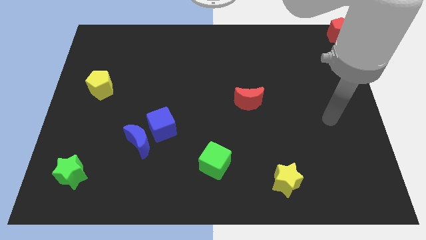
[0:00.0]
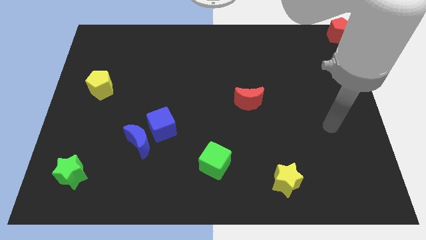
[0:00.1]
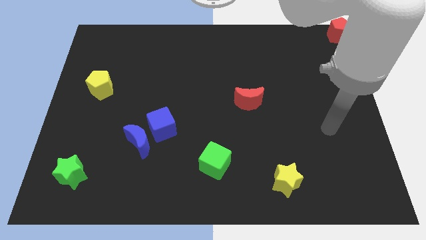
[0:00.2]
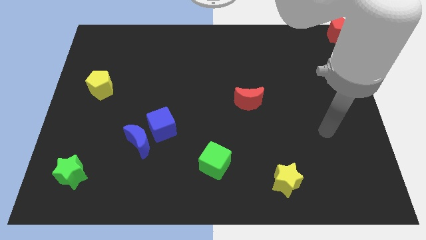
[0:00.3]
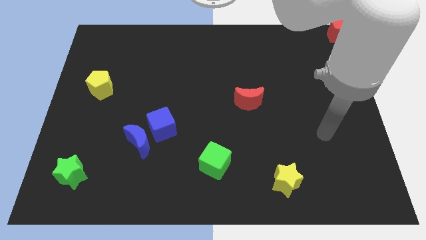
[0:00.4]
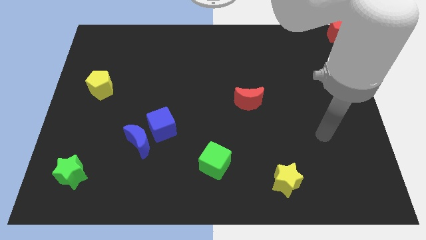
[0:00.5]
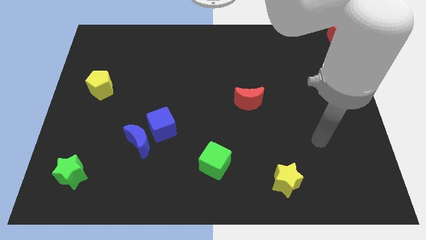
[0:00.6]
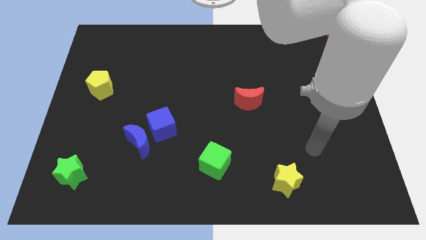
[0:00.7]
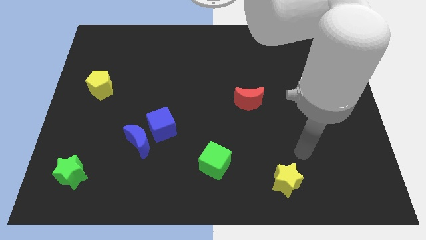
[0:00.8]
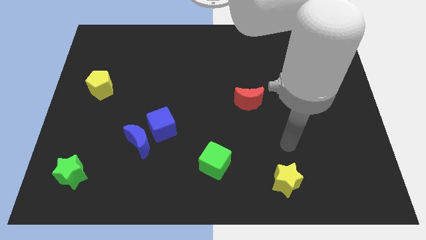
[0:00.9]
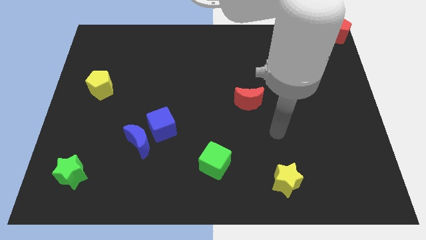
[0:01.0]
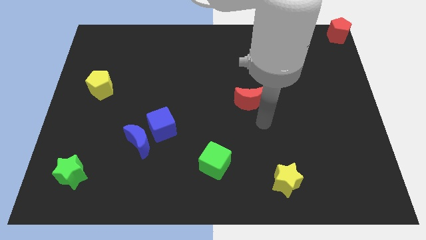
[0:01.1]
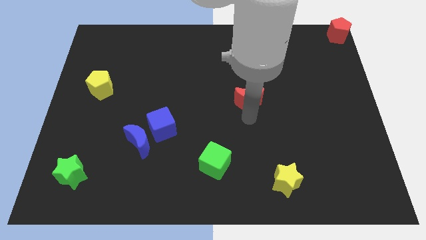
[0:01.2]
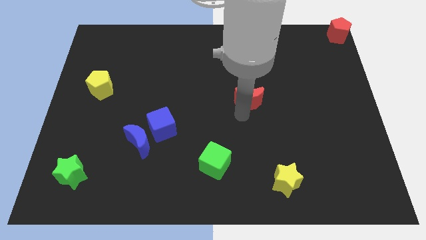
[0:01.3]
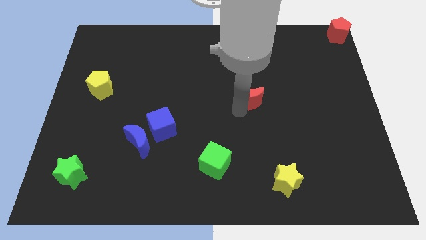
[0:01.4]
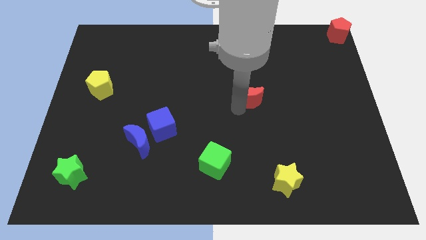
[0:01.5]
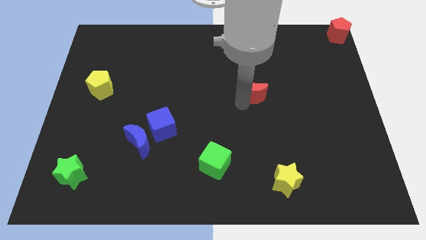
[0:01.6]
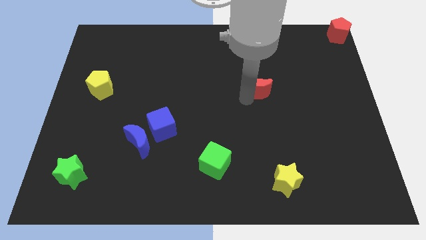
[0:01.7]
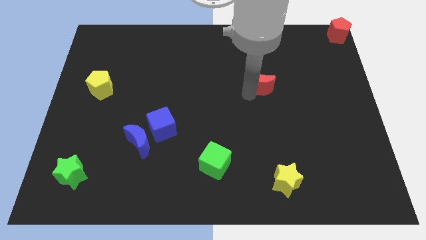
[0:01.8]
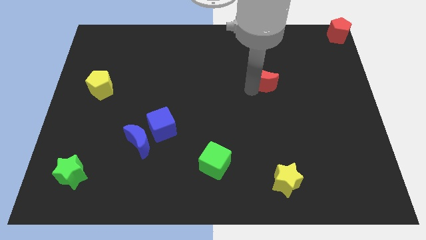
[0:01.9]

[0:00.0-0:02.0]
push the red crescent towards the red pentagon

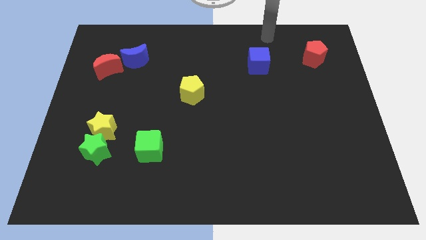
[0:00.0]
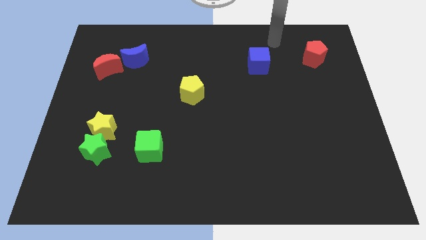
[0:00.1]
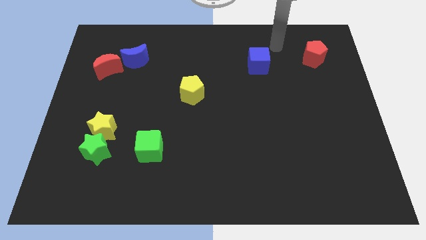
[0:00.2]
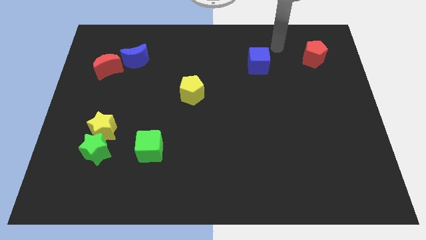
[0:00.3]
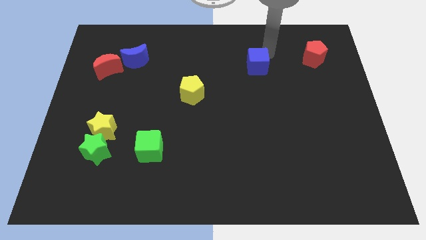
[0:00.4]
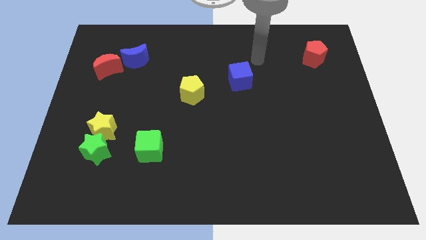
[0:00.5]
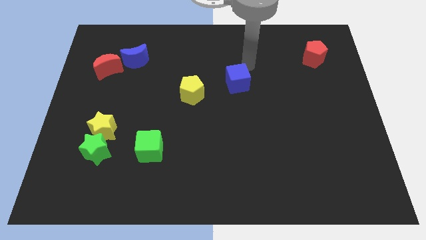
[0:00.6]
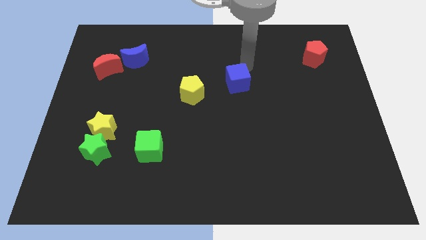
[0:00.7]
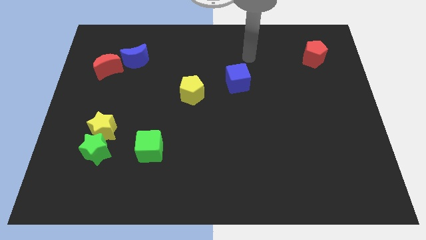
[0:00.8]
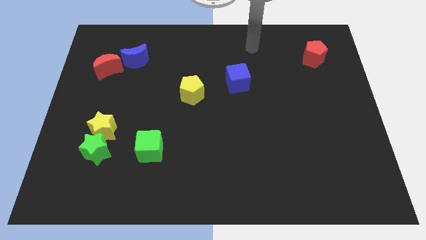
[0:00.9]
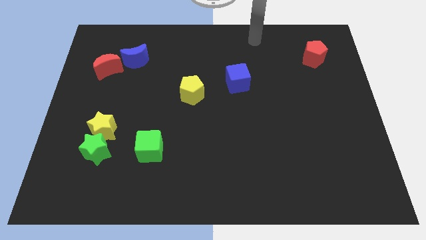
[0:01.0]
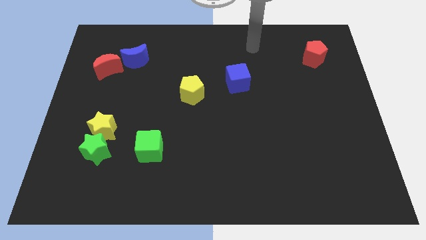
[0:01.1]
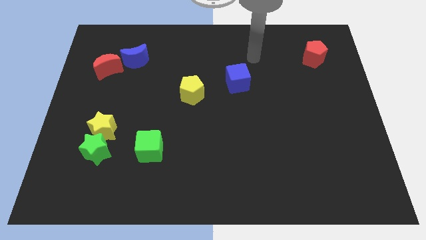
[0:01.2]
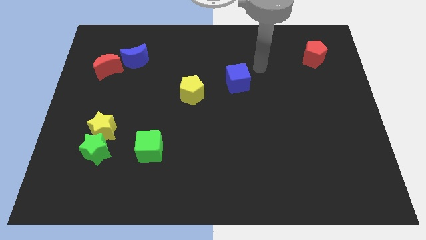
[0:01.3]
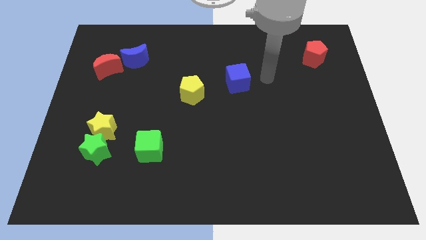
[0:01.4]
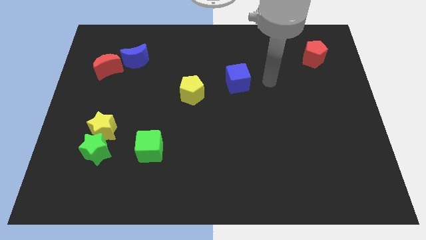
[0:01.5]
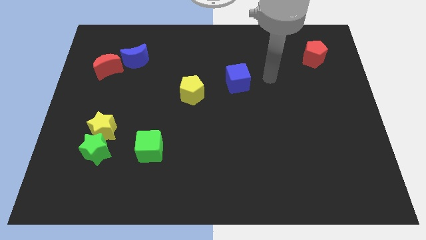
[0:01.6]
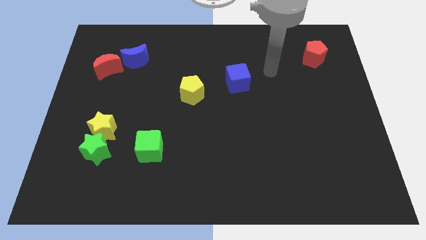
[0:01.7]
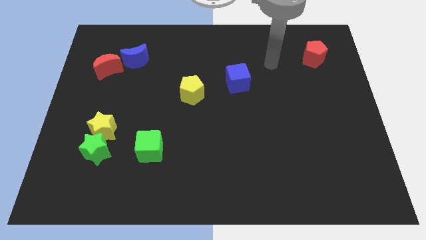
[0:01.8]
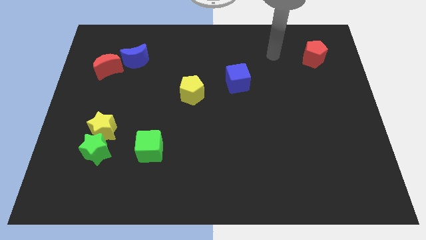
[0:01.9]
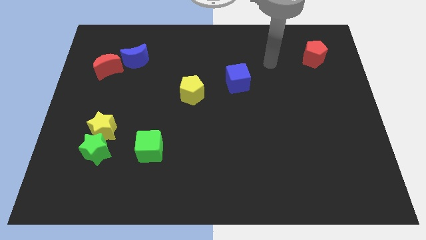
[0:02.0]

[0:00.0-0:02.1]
move the blue cube towards the yellow pentagon

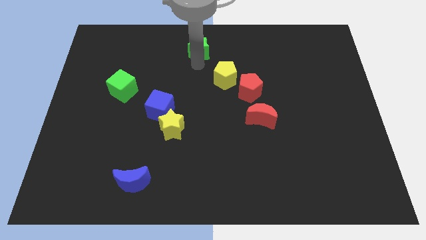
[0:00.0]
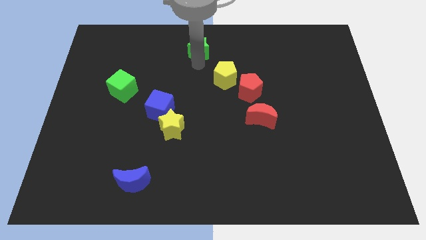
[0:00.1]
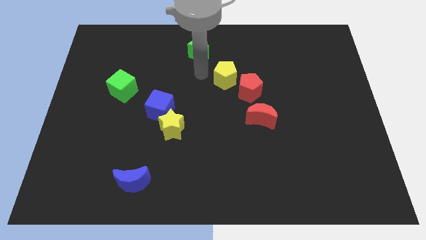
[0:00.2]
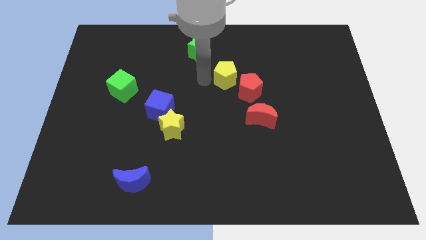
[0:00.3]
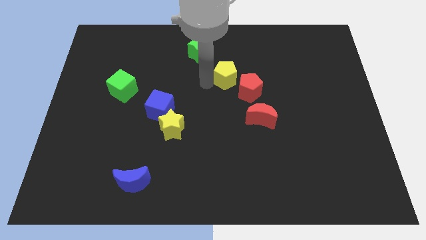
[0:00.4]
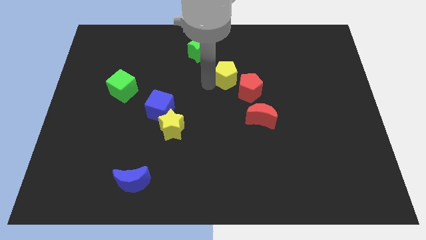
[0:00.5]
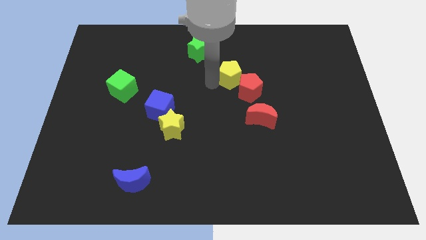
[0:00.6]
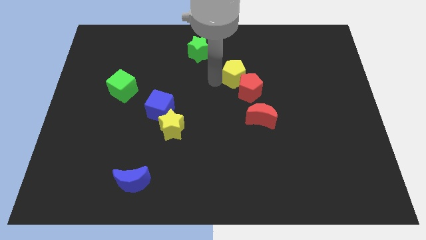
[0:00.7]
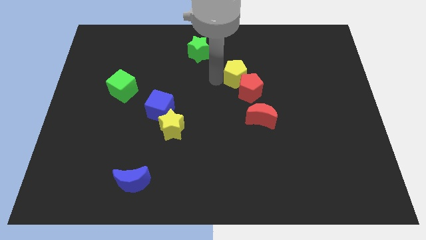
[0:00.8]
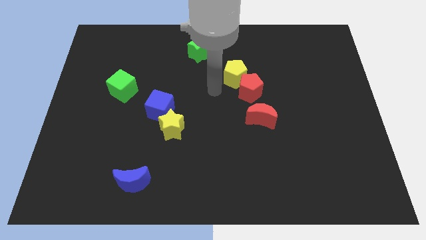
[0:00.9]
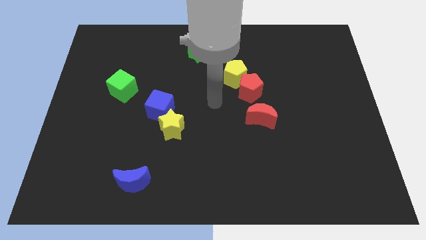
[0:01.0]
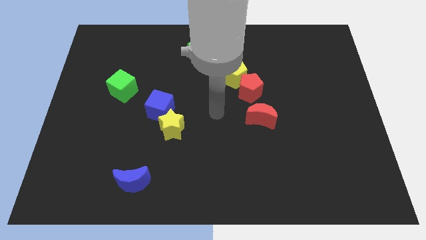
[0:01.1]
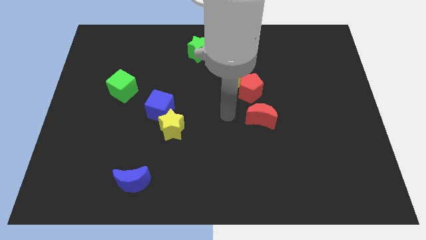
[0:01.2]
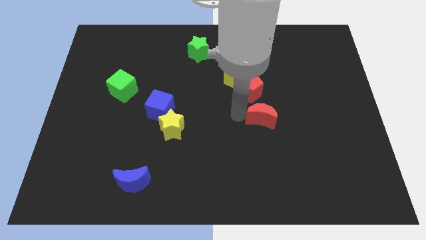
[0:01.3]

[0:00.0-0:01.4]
push the yellow pentagon towards the red pentagon

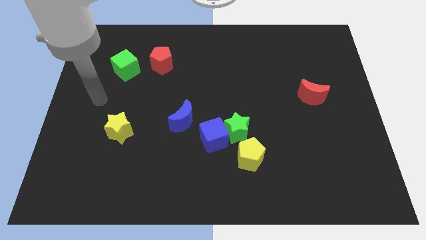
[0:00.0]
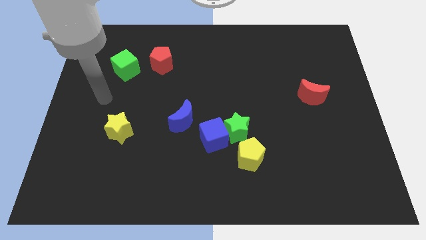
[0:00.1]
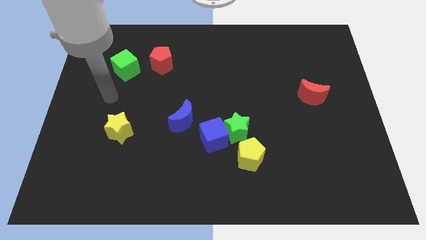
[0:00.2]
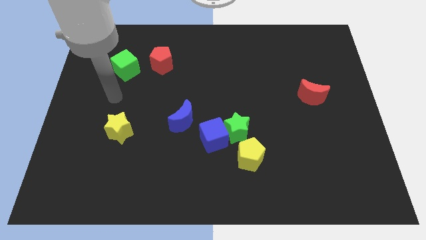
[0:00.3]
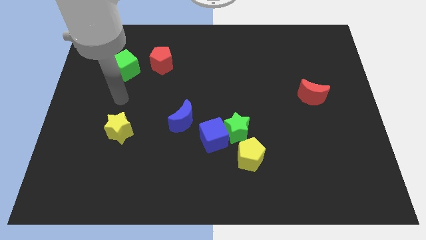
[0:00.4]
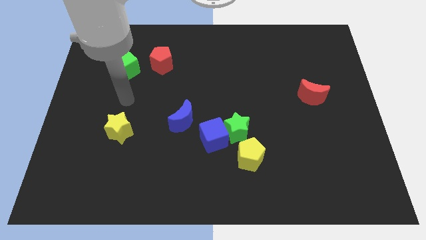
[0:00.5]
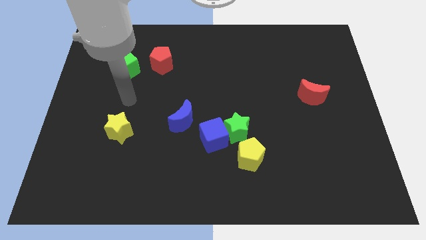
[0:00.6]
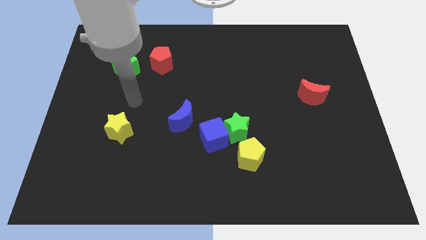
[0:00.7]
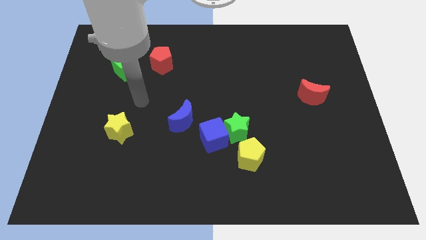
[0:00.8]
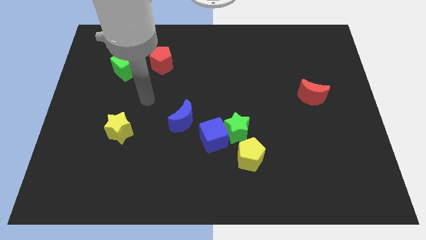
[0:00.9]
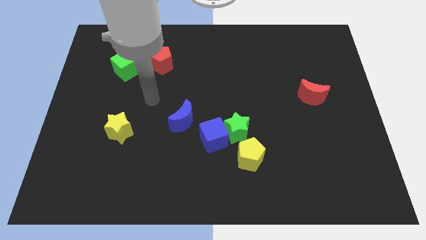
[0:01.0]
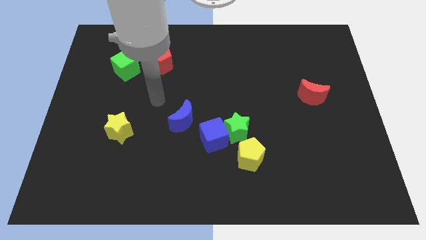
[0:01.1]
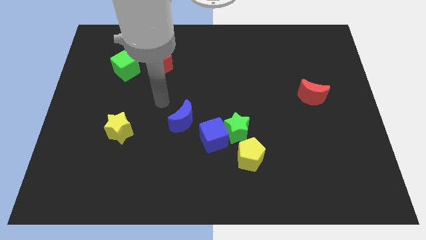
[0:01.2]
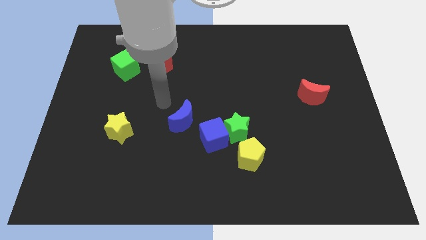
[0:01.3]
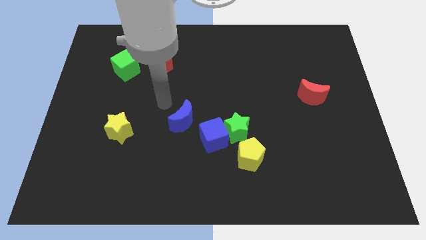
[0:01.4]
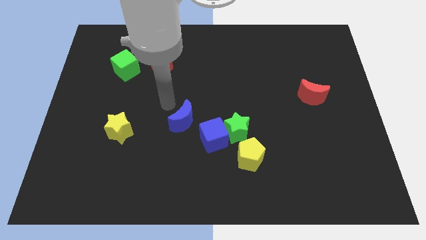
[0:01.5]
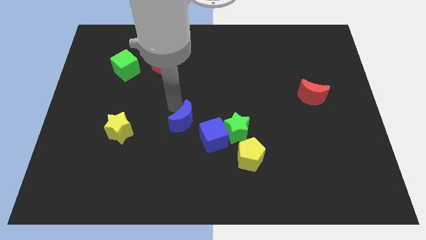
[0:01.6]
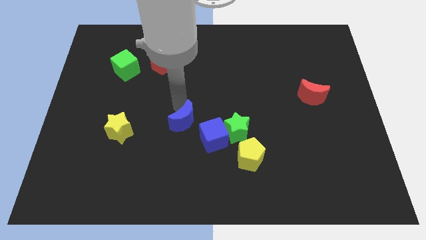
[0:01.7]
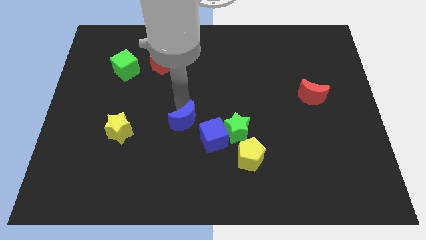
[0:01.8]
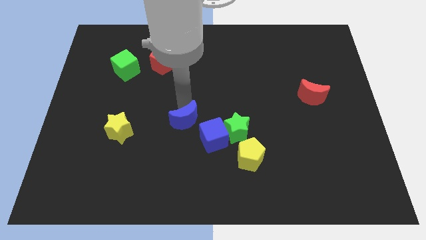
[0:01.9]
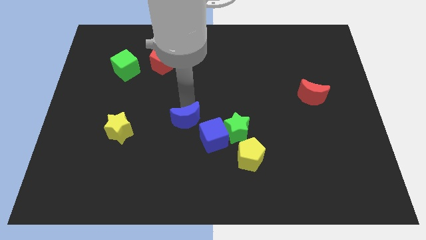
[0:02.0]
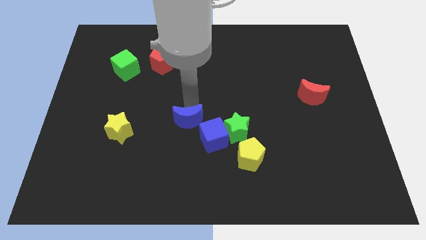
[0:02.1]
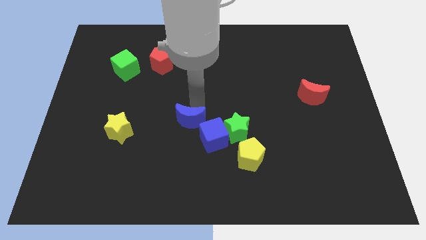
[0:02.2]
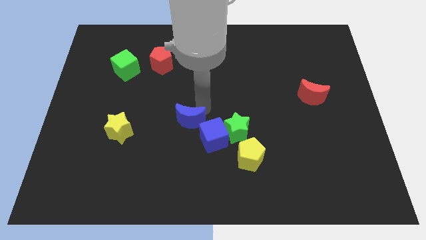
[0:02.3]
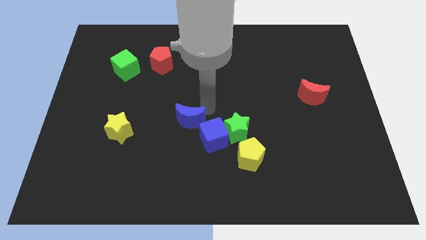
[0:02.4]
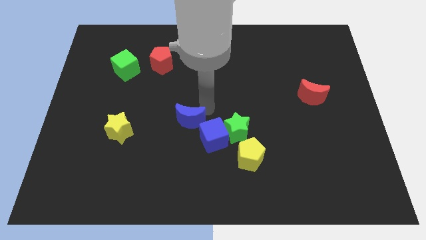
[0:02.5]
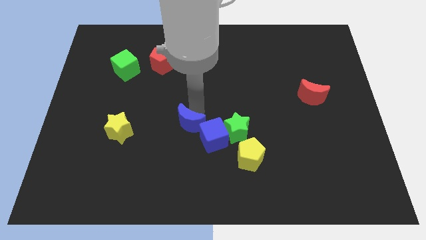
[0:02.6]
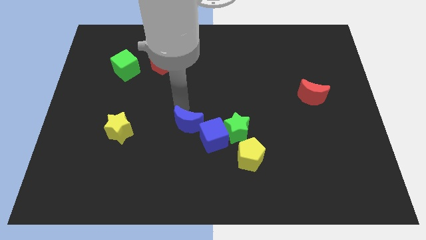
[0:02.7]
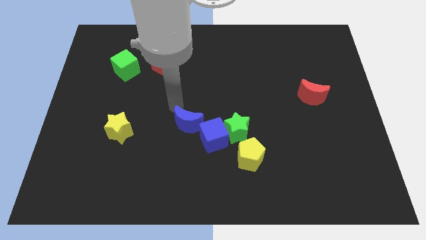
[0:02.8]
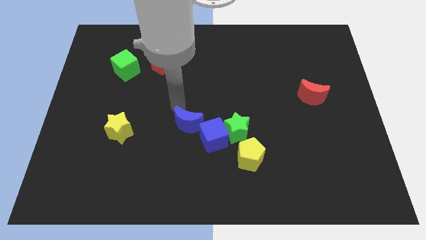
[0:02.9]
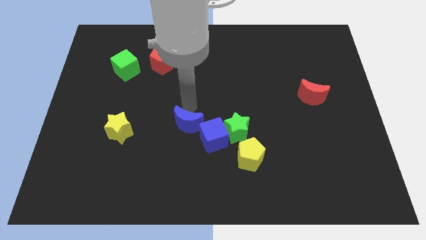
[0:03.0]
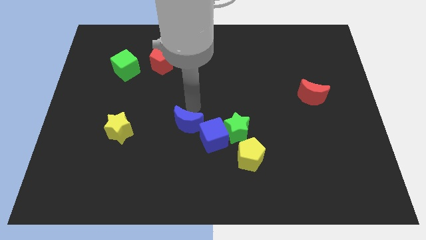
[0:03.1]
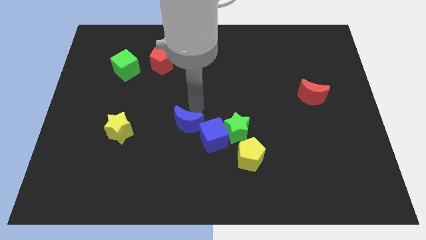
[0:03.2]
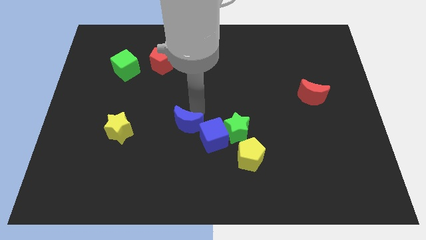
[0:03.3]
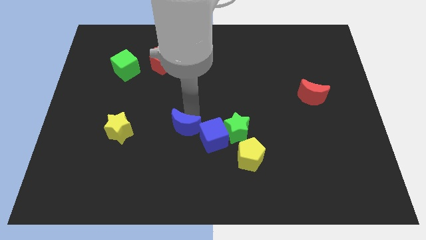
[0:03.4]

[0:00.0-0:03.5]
slightly touch the blue moon
